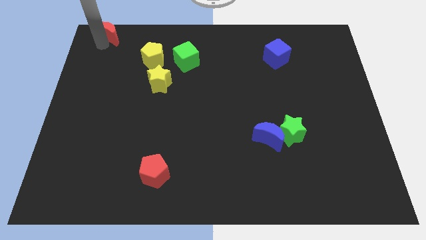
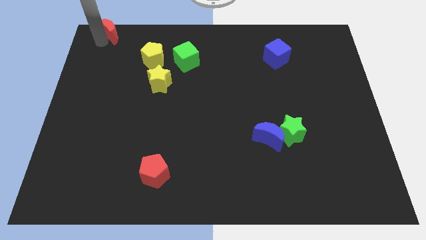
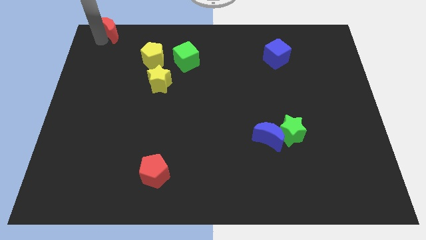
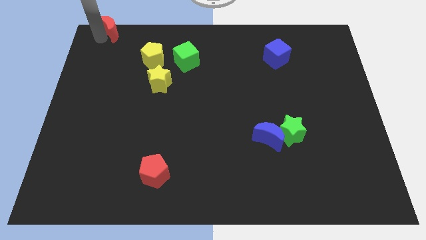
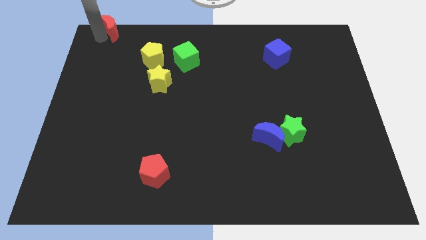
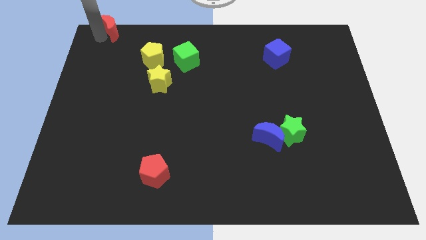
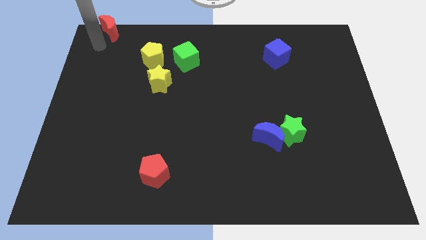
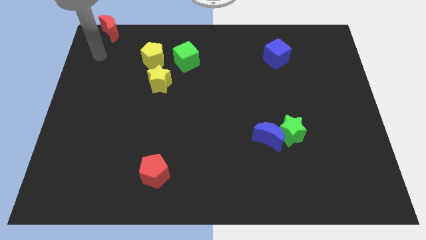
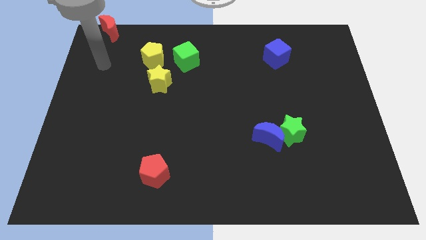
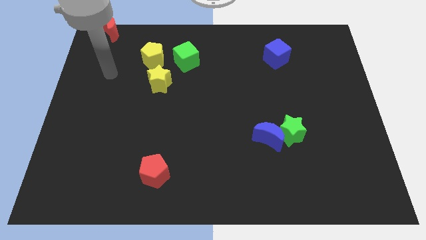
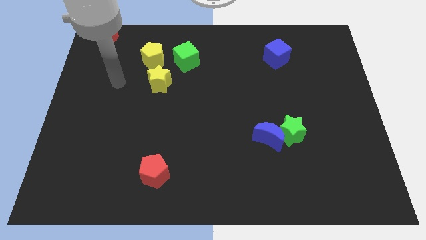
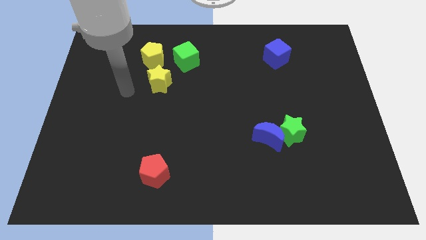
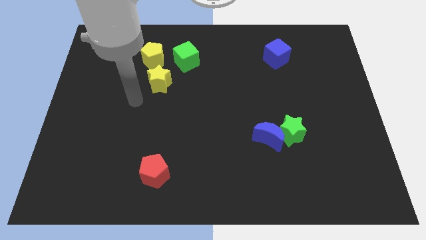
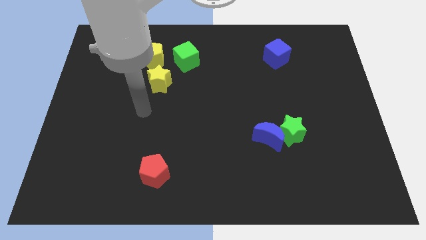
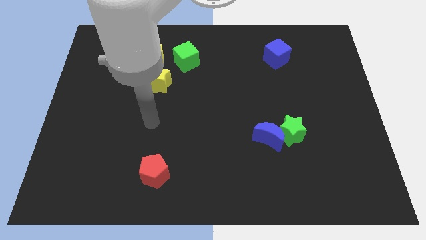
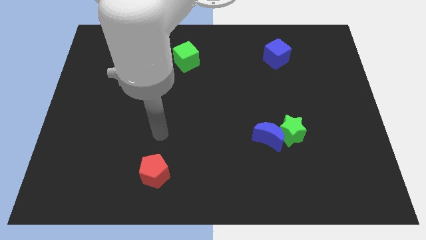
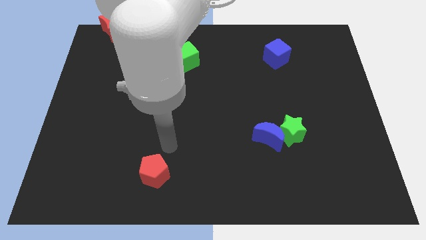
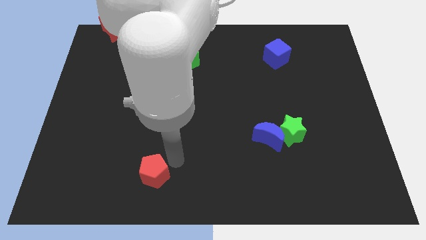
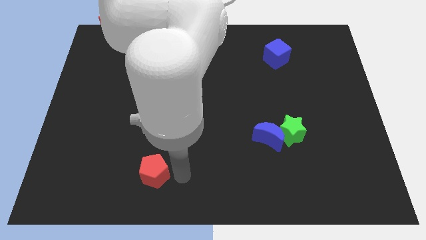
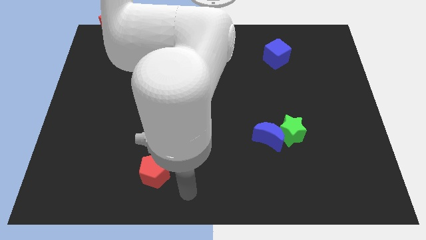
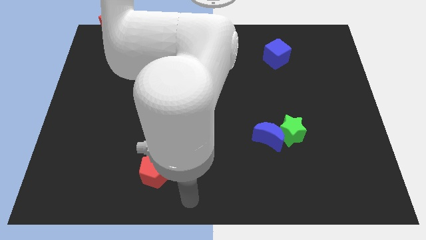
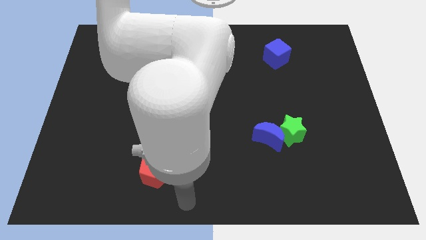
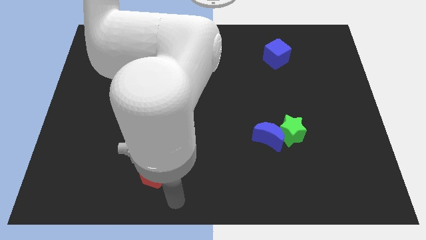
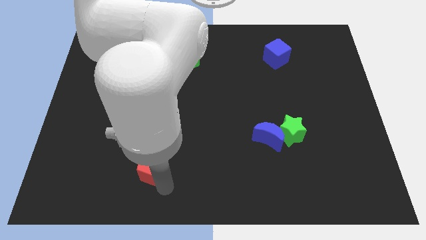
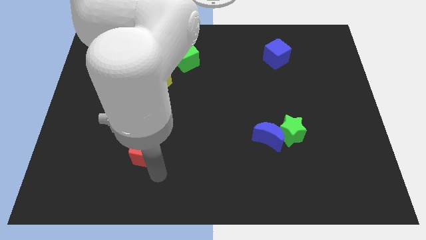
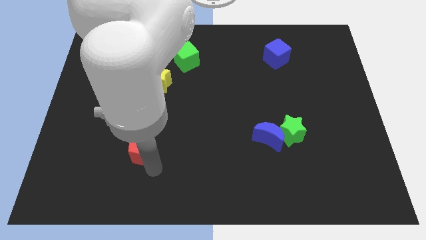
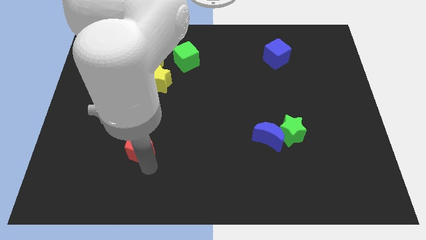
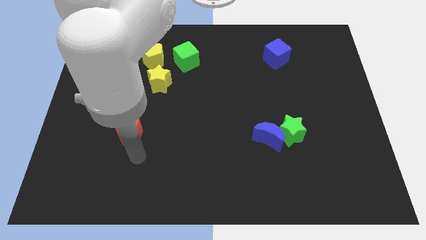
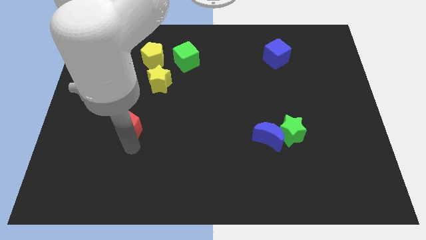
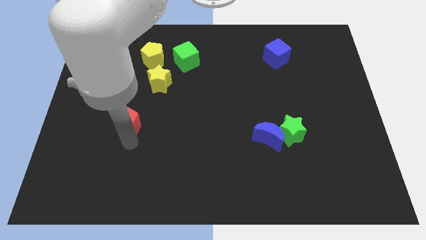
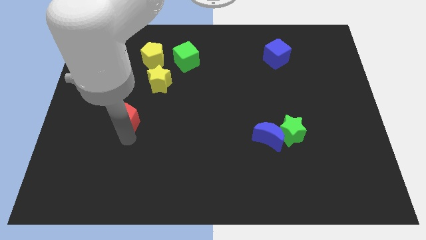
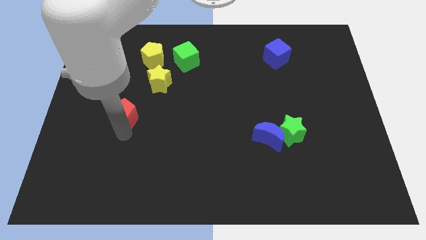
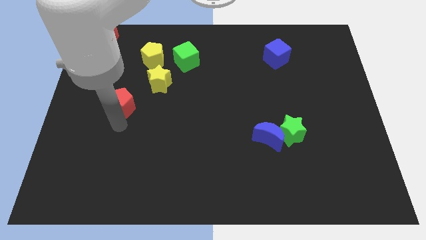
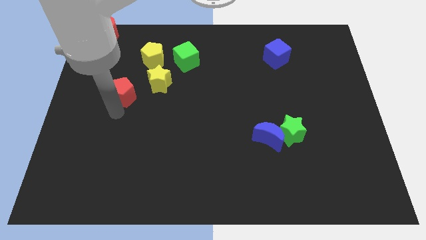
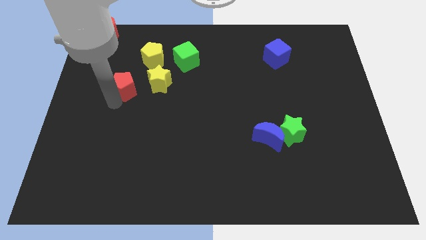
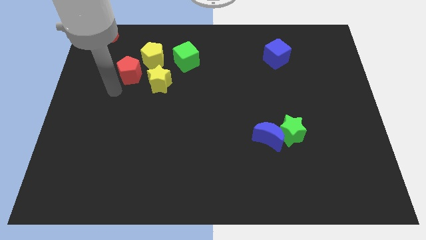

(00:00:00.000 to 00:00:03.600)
place red pentagon to the left of yellow star

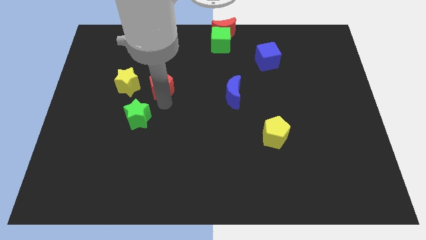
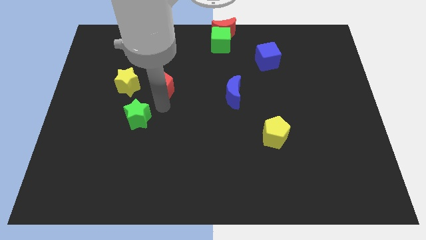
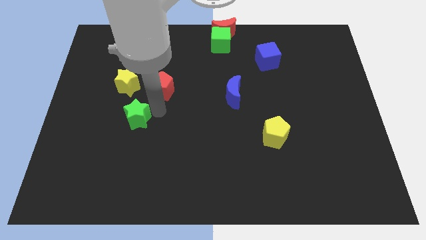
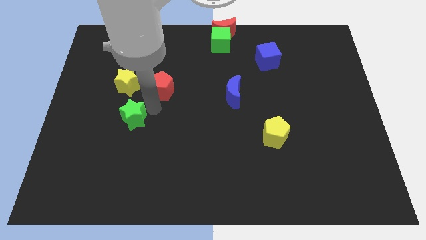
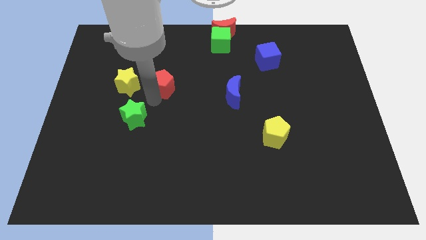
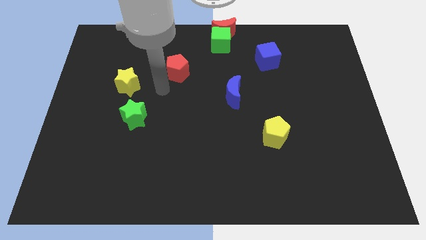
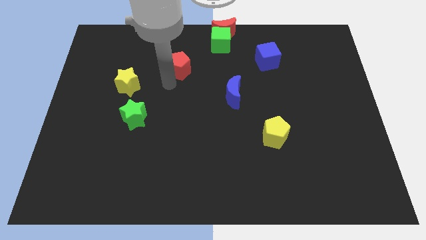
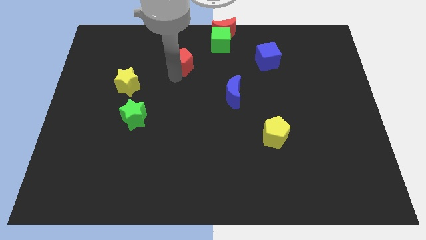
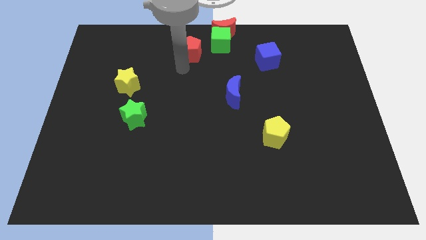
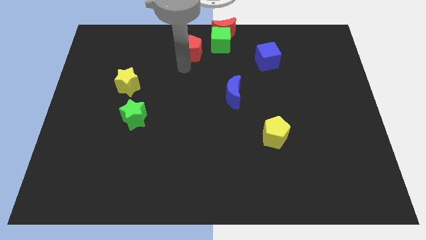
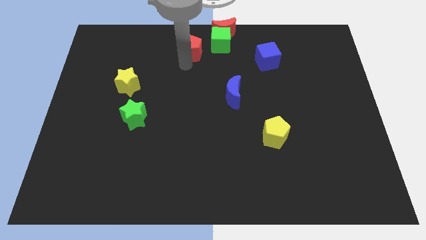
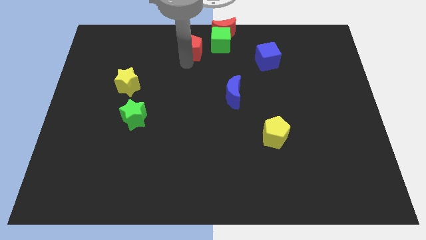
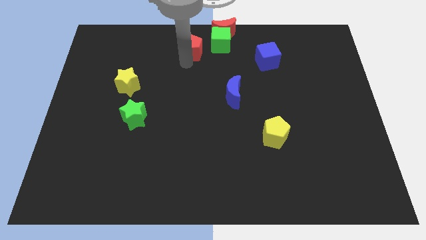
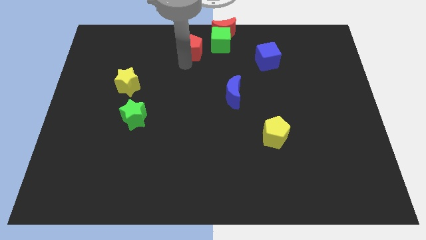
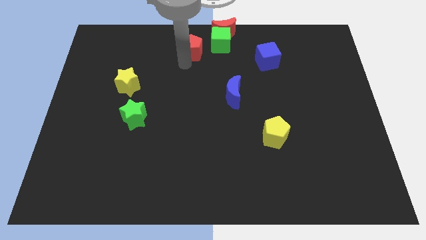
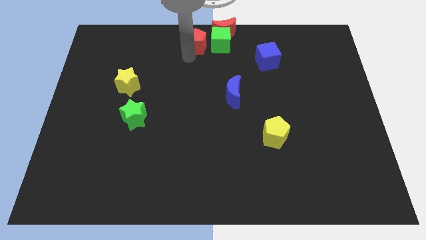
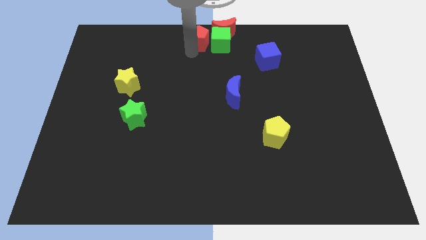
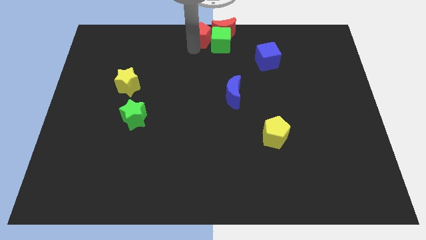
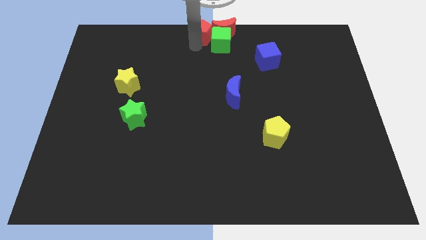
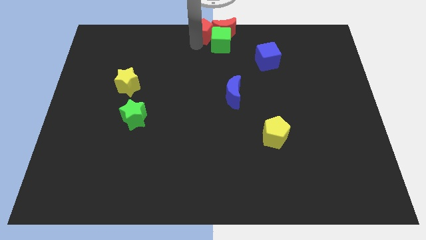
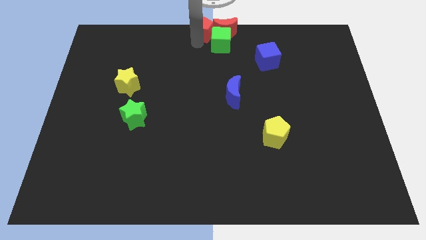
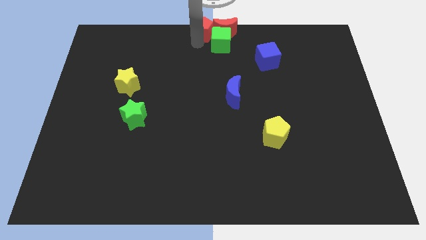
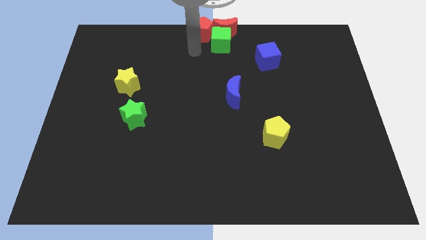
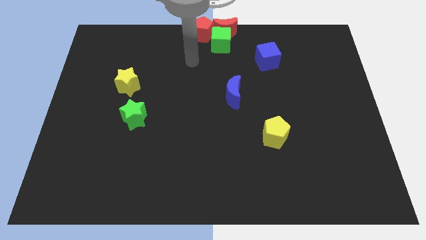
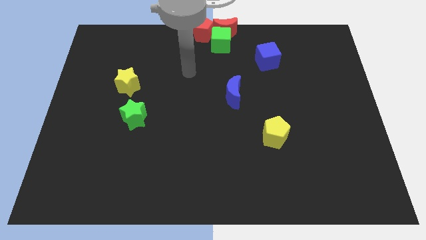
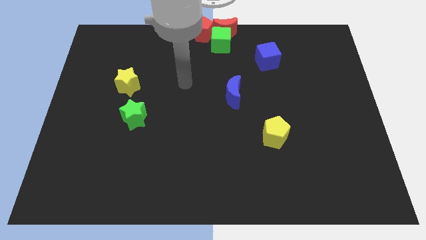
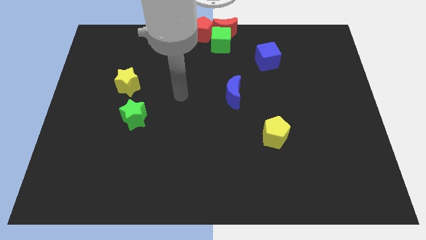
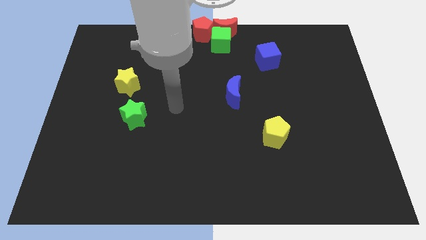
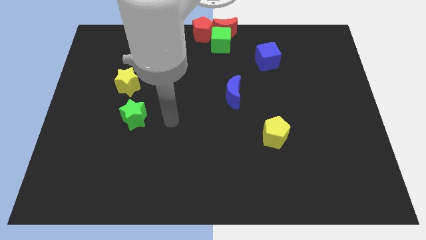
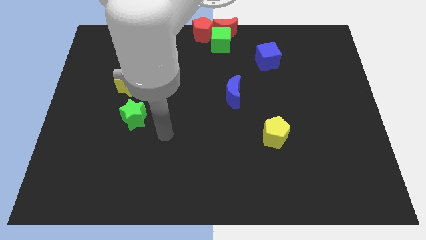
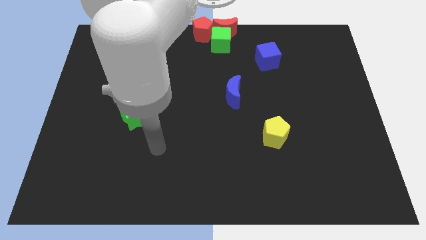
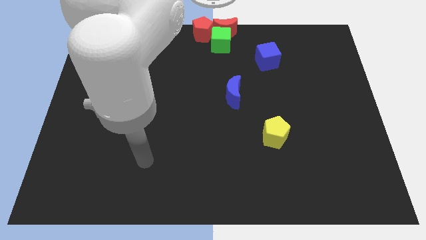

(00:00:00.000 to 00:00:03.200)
move red pentagon to center top of the board

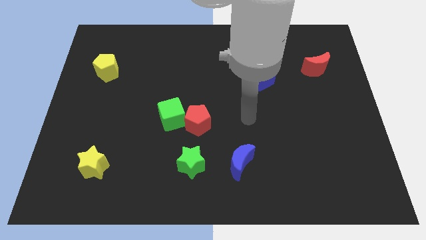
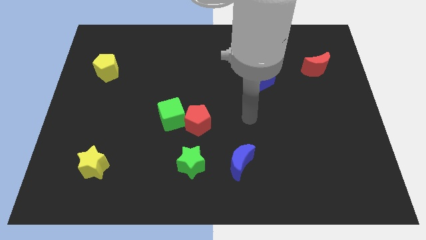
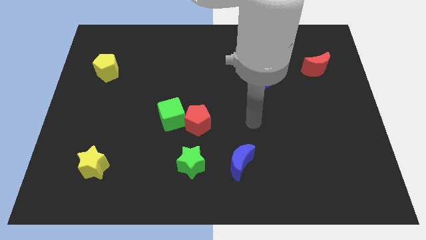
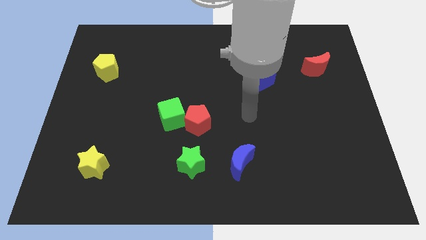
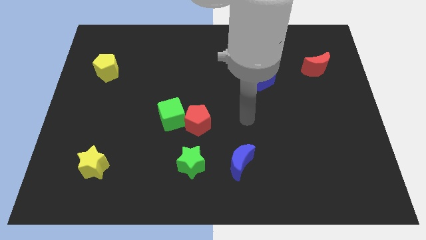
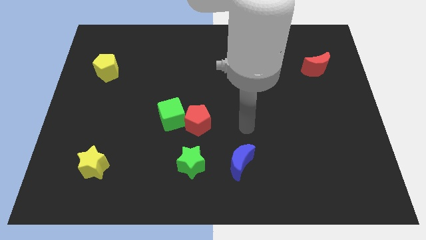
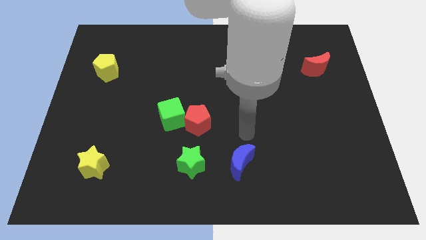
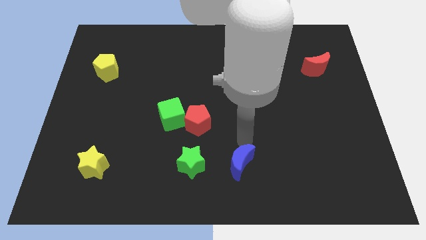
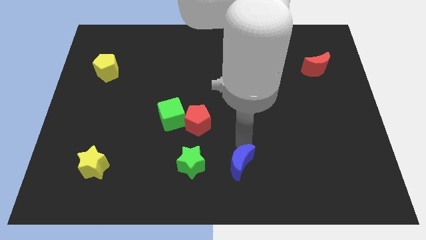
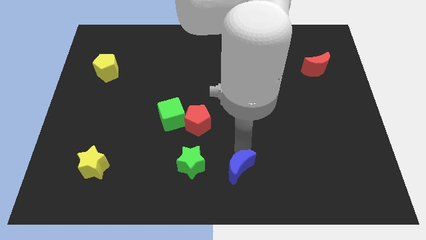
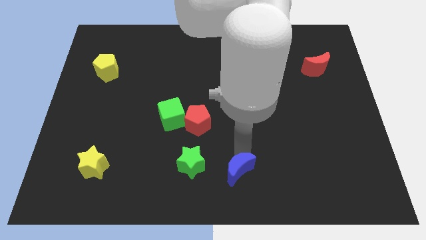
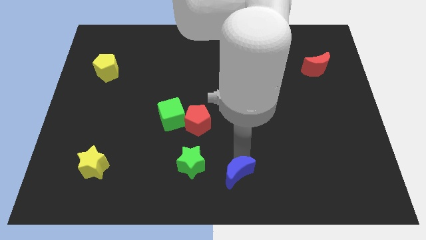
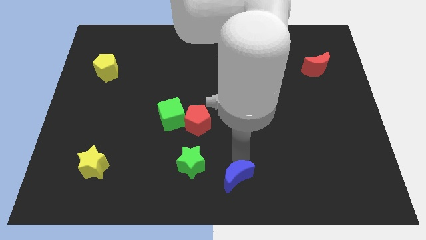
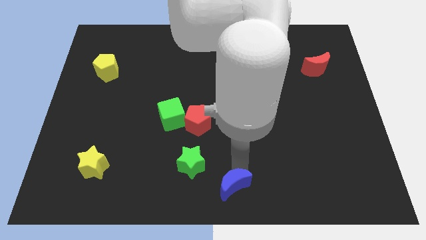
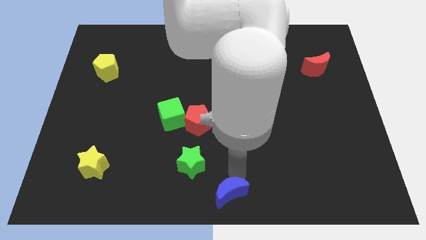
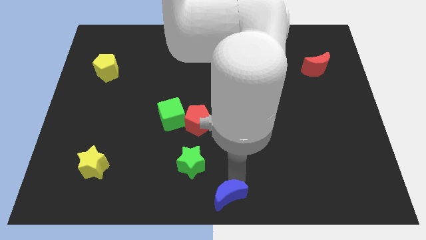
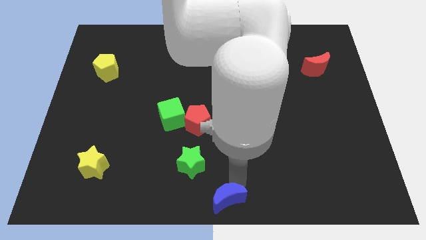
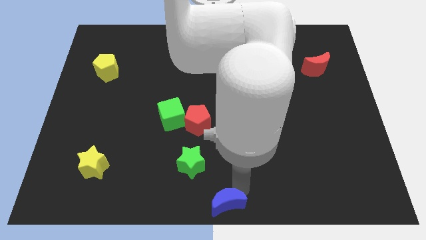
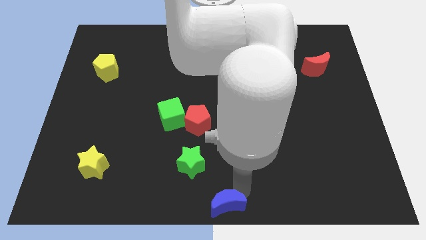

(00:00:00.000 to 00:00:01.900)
push the blue moon to the bottom center

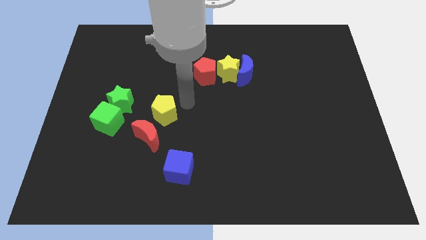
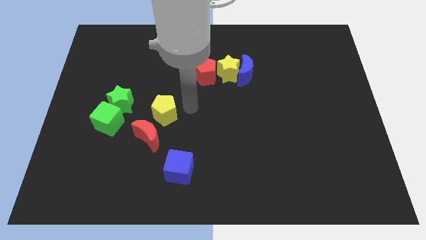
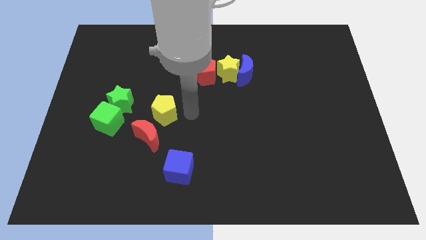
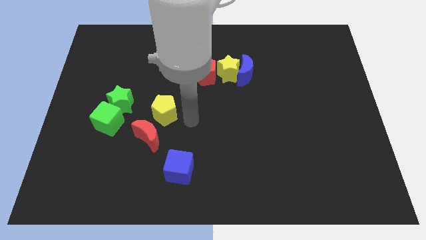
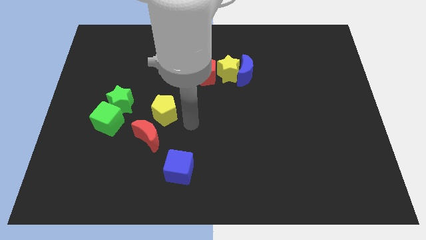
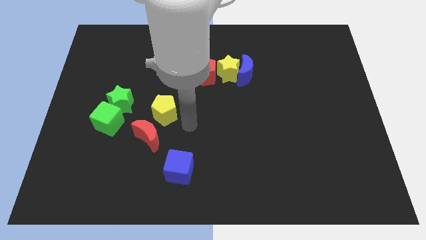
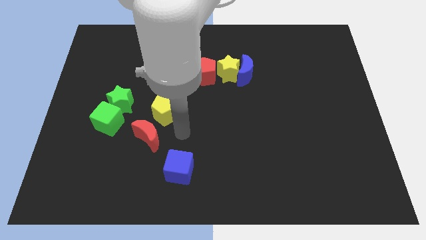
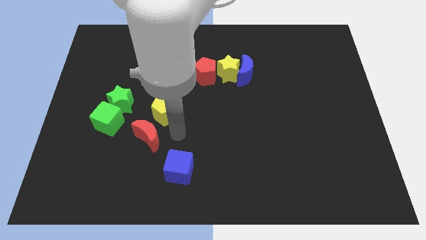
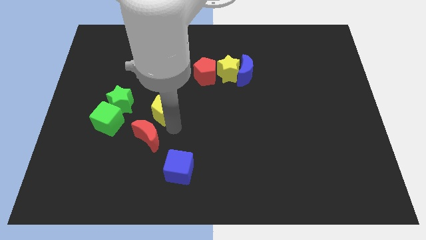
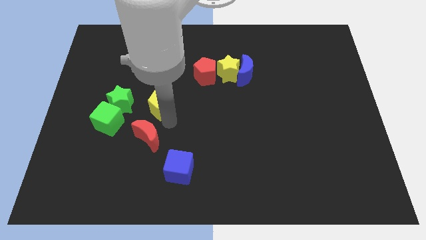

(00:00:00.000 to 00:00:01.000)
touch the bottom of yellow pentagon
